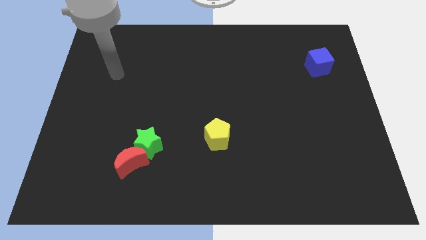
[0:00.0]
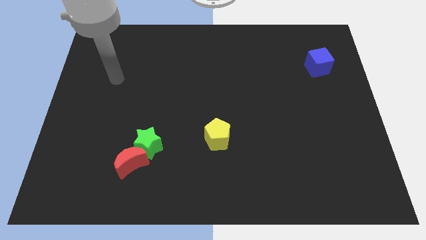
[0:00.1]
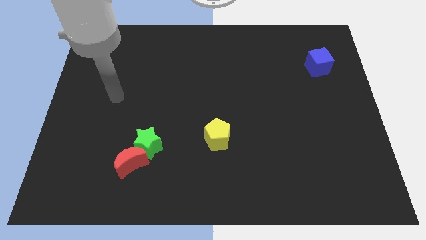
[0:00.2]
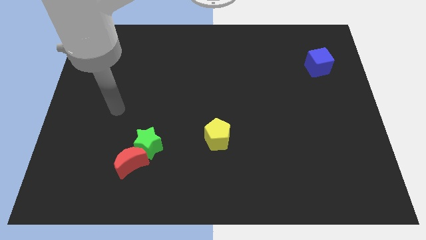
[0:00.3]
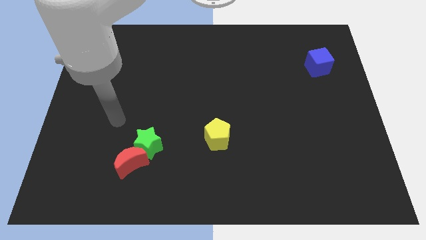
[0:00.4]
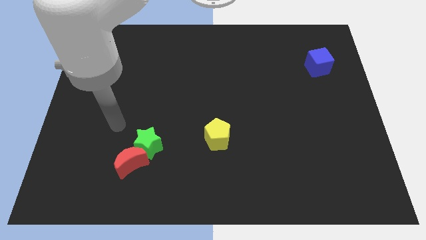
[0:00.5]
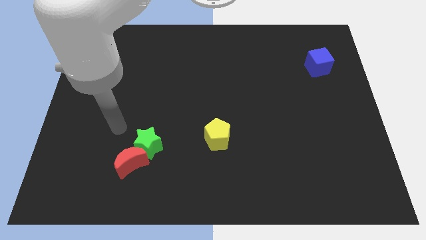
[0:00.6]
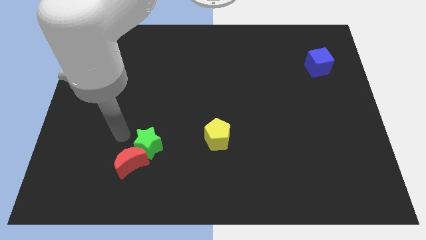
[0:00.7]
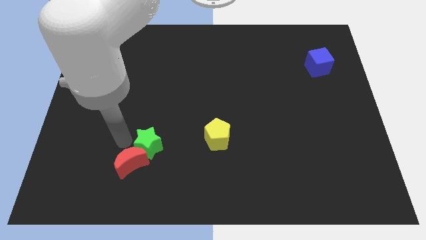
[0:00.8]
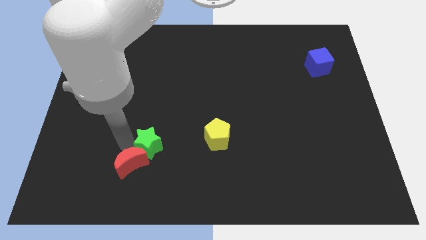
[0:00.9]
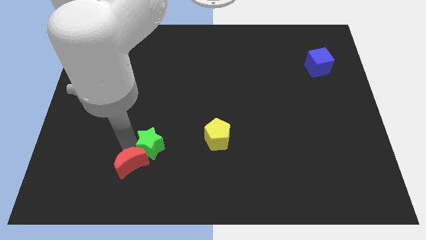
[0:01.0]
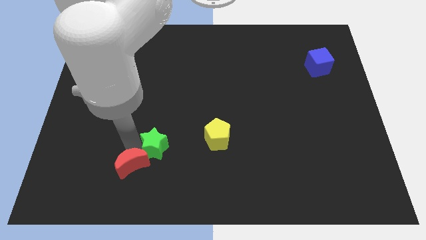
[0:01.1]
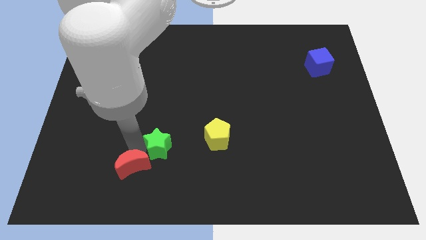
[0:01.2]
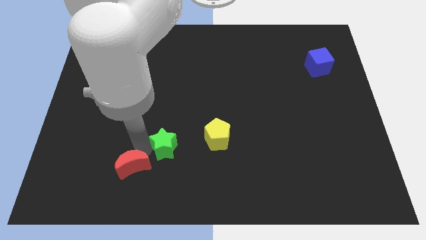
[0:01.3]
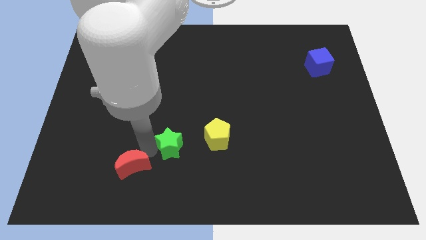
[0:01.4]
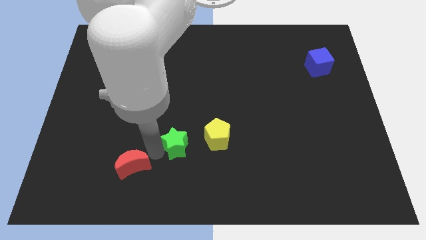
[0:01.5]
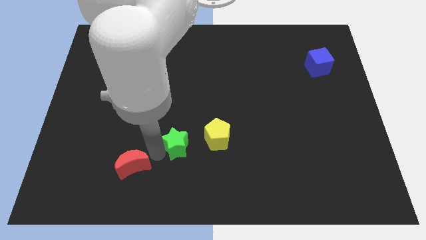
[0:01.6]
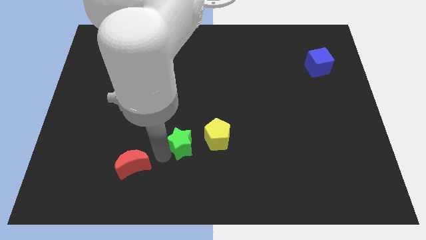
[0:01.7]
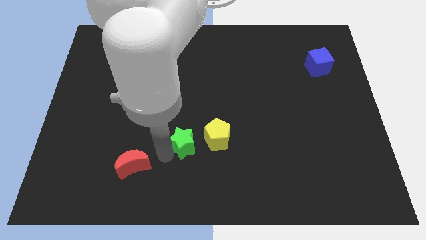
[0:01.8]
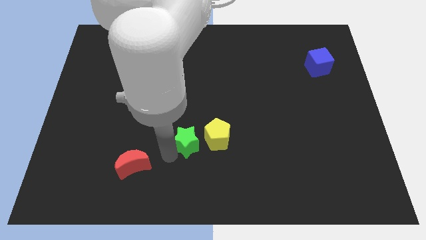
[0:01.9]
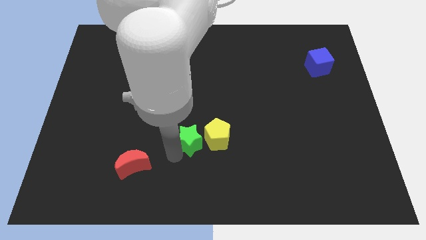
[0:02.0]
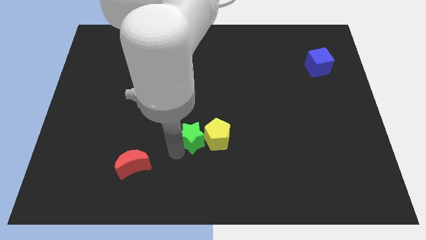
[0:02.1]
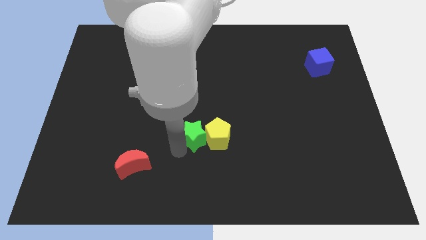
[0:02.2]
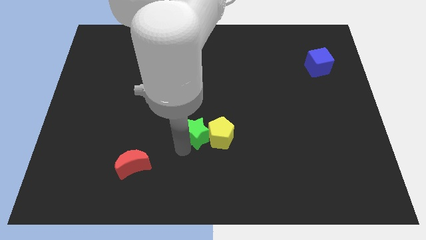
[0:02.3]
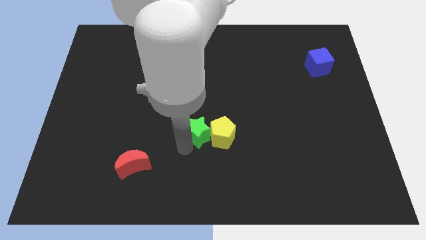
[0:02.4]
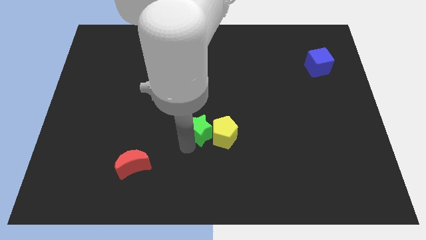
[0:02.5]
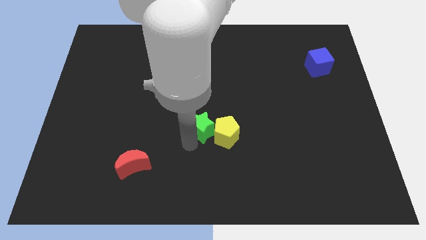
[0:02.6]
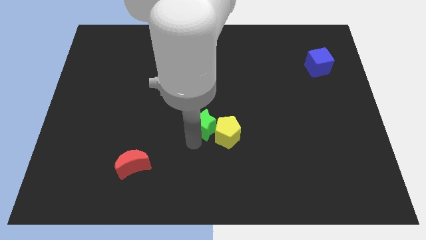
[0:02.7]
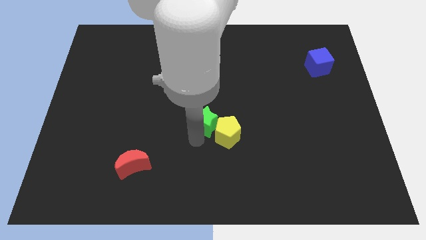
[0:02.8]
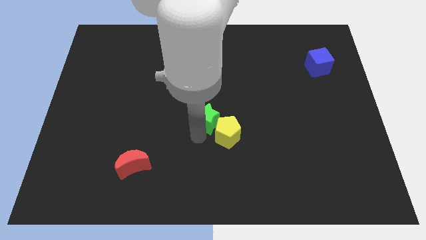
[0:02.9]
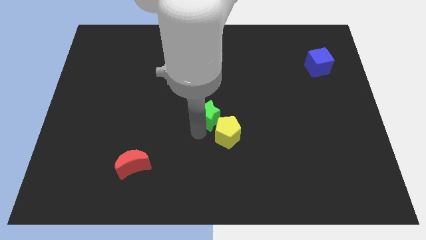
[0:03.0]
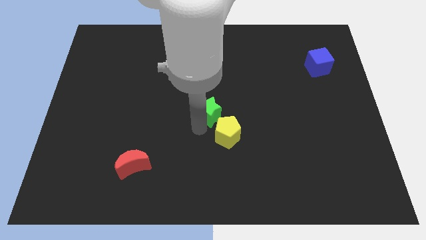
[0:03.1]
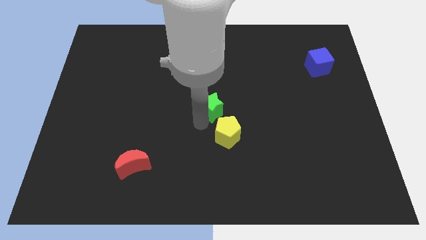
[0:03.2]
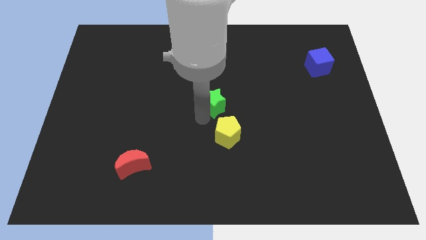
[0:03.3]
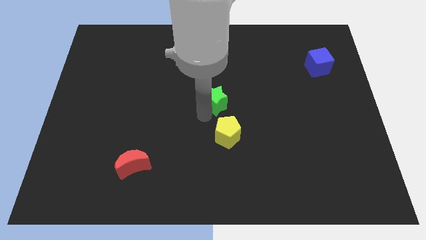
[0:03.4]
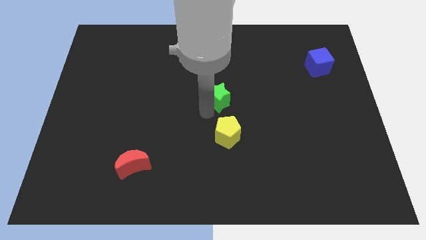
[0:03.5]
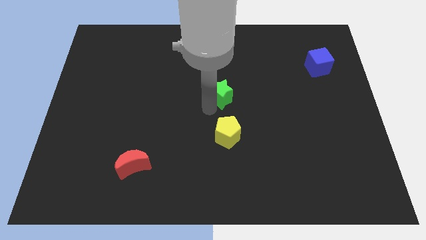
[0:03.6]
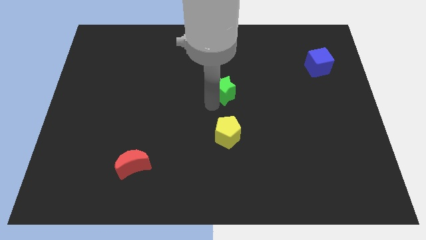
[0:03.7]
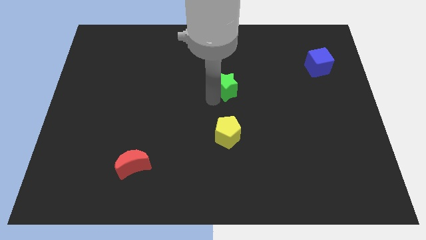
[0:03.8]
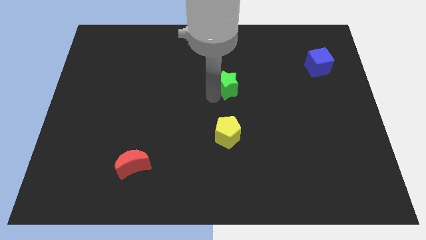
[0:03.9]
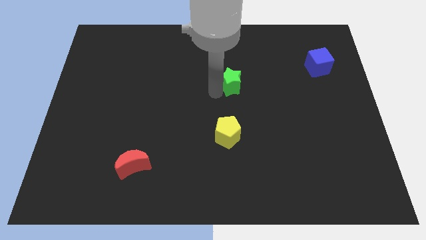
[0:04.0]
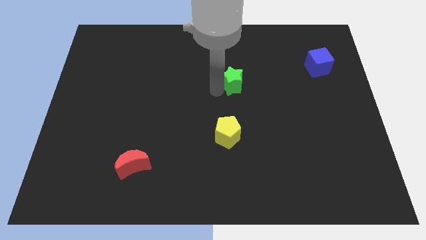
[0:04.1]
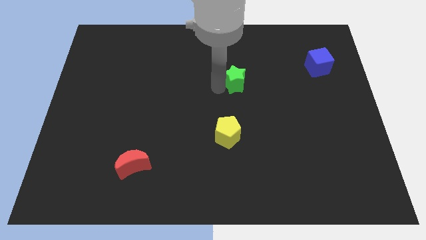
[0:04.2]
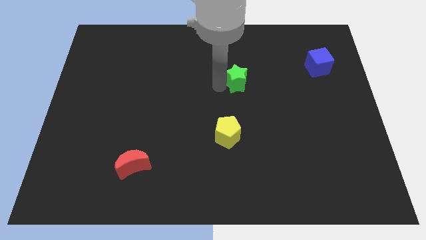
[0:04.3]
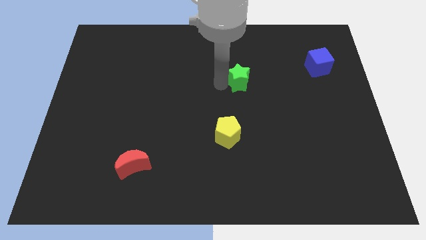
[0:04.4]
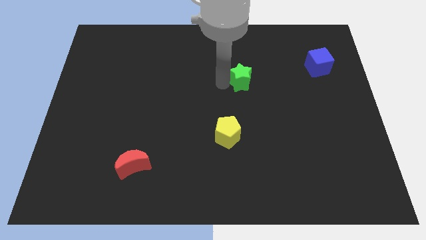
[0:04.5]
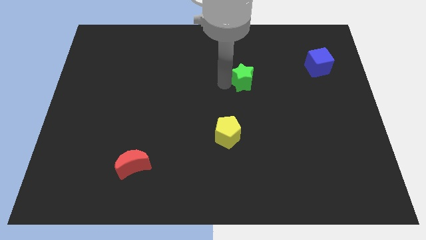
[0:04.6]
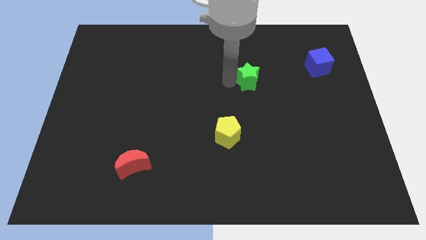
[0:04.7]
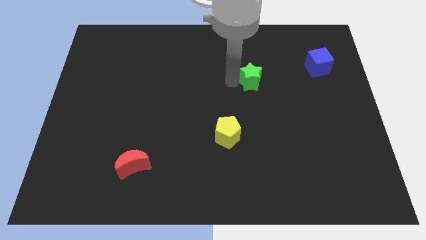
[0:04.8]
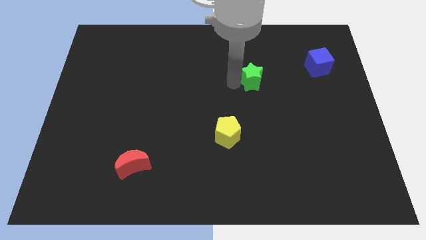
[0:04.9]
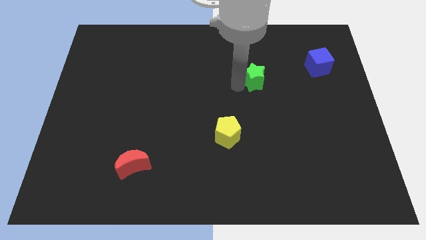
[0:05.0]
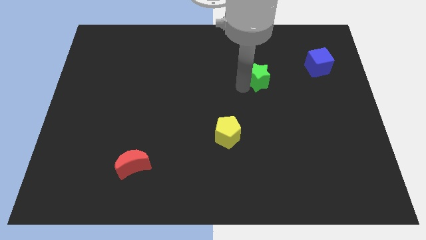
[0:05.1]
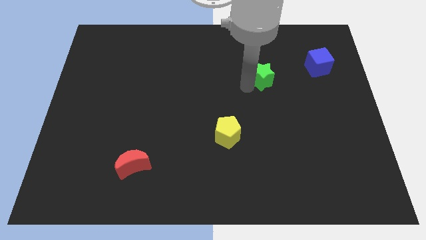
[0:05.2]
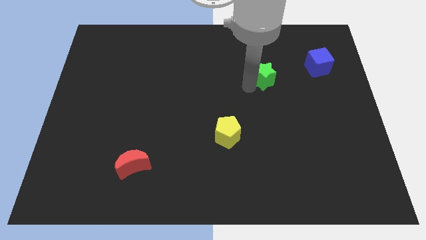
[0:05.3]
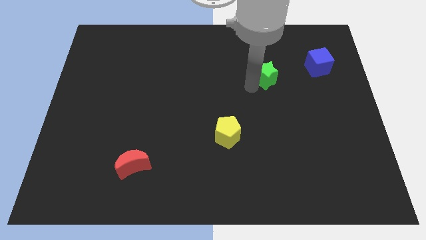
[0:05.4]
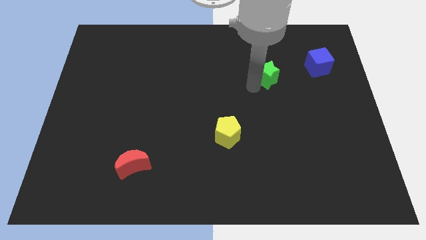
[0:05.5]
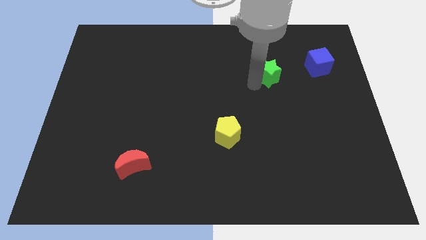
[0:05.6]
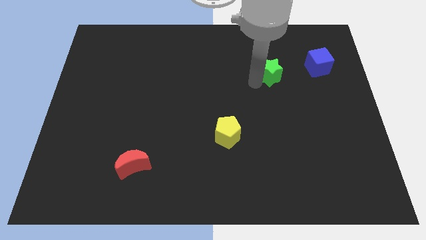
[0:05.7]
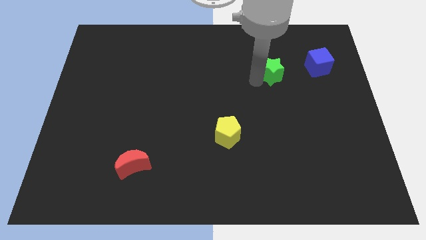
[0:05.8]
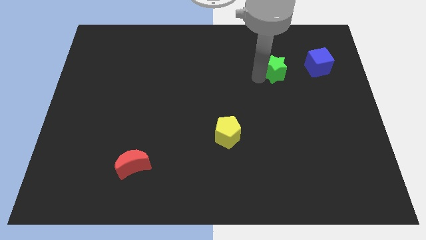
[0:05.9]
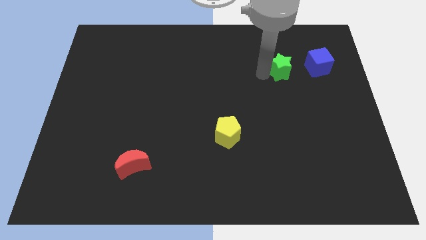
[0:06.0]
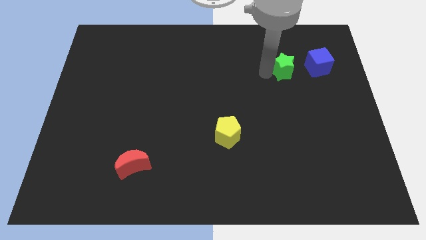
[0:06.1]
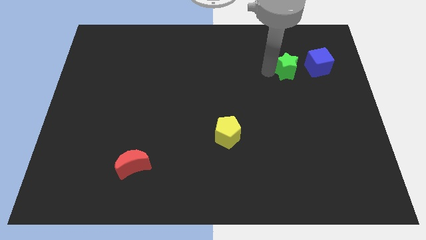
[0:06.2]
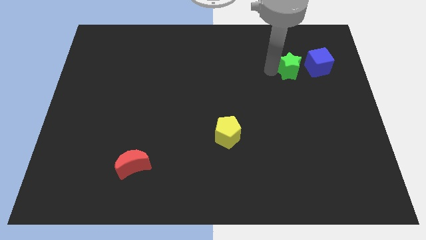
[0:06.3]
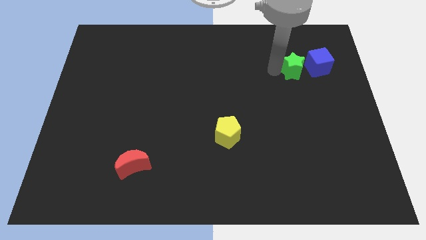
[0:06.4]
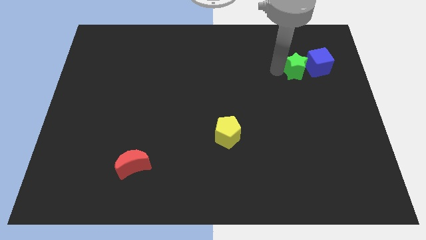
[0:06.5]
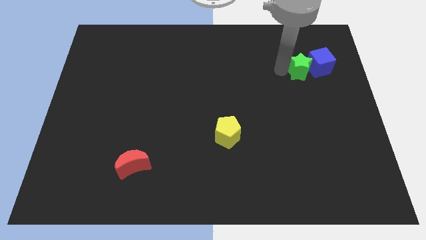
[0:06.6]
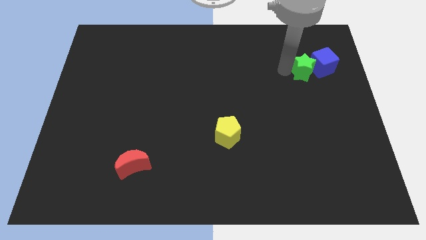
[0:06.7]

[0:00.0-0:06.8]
slide the star close to the blue cube

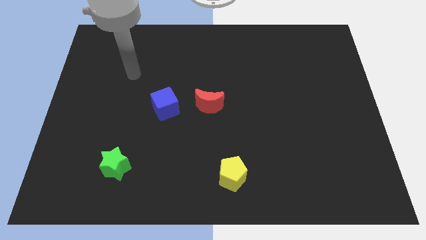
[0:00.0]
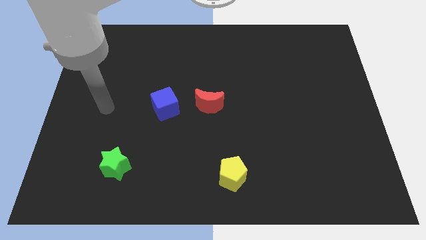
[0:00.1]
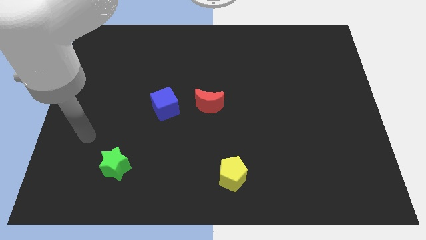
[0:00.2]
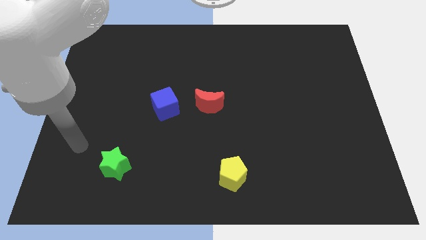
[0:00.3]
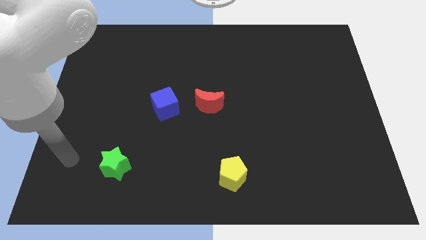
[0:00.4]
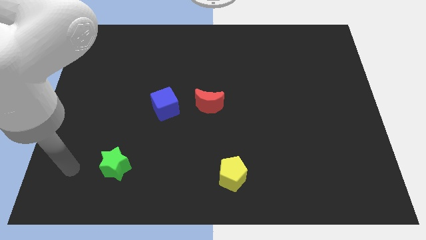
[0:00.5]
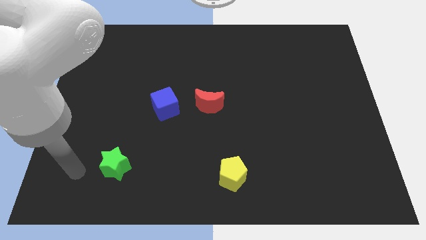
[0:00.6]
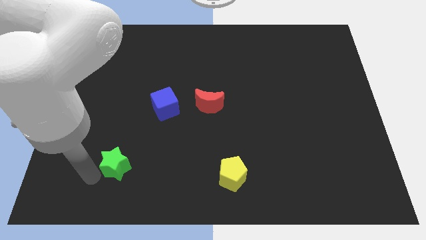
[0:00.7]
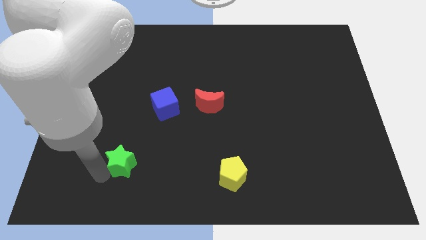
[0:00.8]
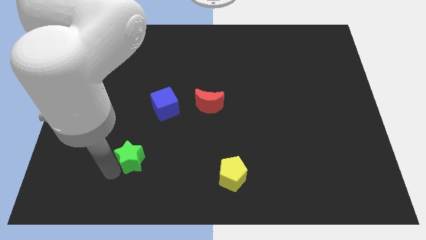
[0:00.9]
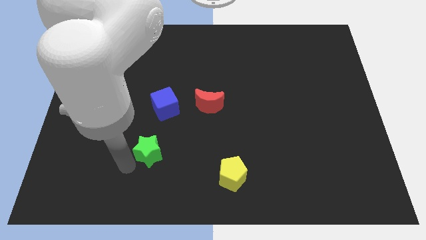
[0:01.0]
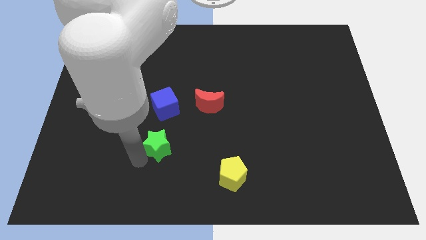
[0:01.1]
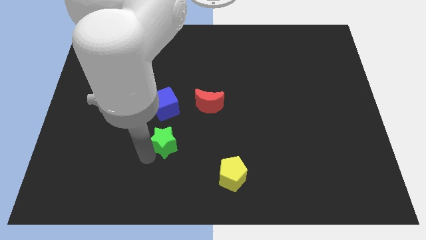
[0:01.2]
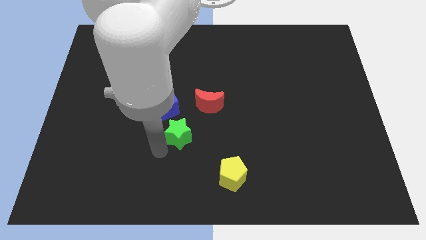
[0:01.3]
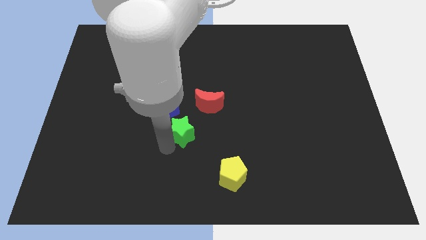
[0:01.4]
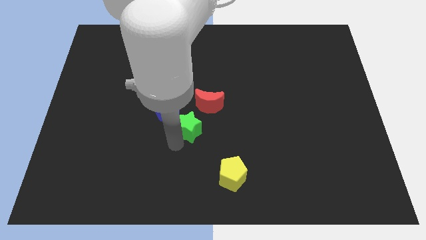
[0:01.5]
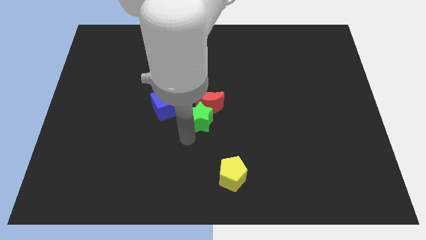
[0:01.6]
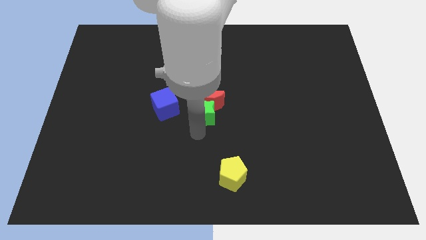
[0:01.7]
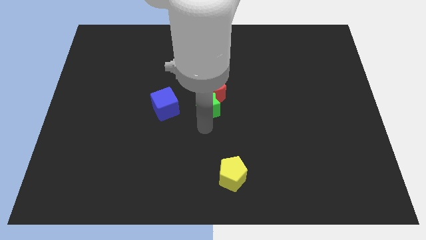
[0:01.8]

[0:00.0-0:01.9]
put the green star towards the moon
